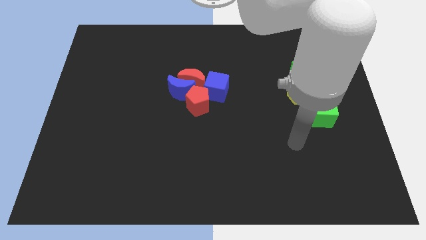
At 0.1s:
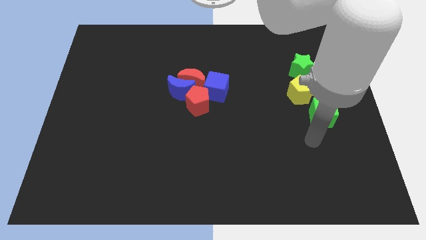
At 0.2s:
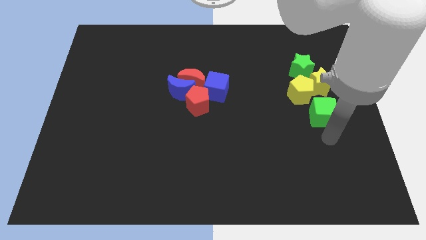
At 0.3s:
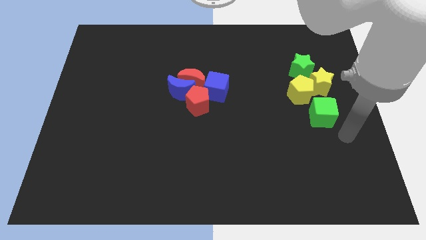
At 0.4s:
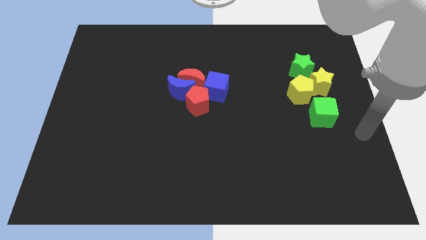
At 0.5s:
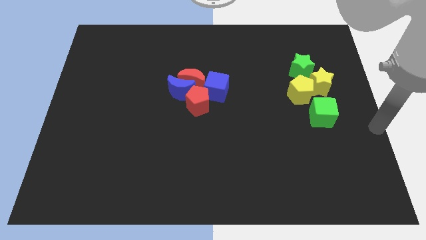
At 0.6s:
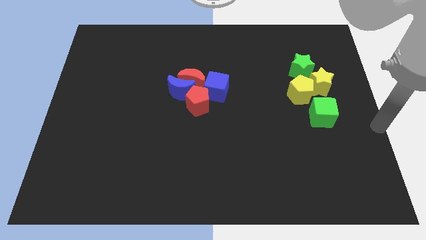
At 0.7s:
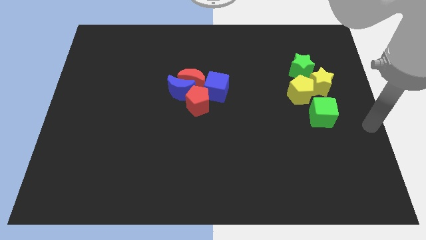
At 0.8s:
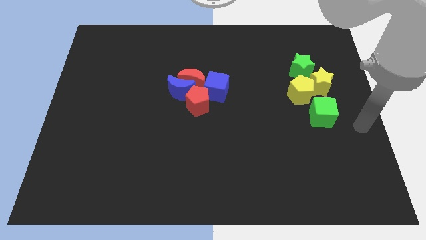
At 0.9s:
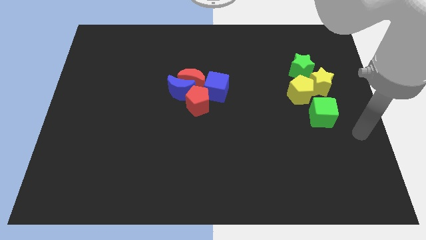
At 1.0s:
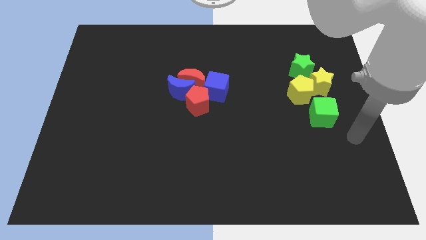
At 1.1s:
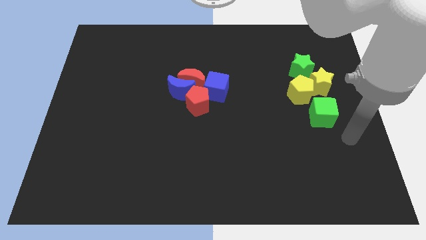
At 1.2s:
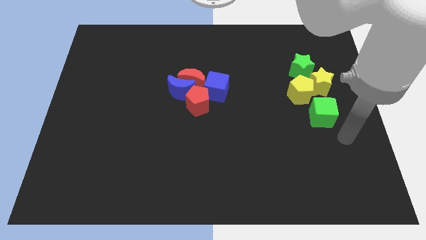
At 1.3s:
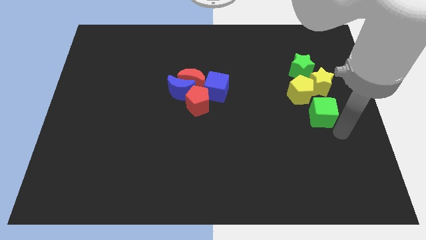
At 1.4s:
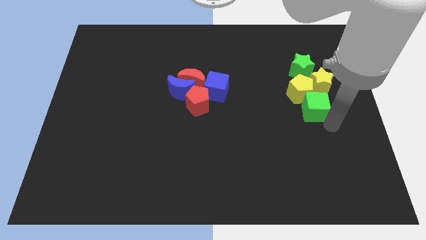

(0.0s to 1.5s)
place your arm to the bottom right of green cube

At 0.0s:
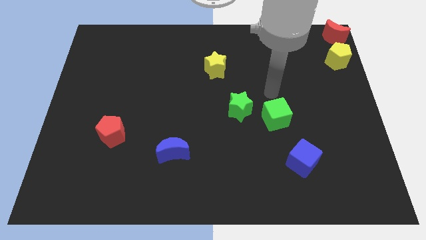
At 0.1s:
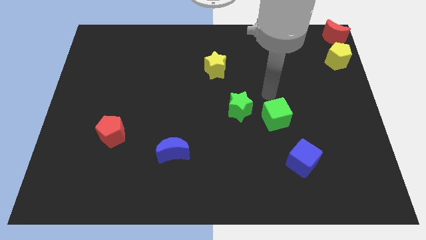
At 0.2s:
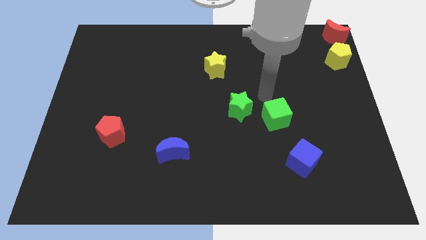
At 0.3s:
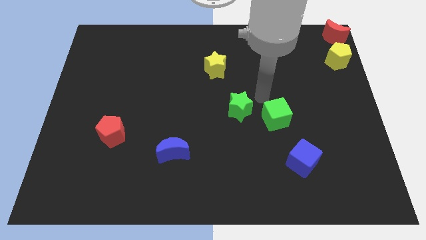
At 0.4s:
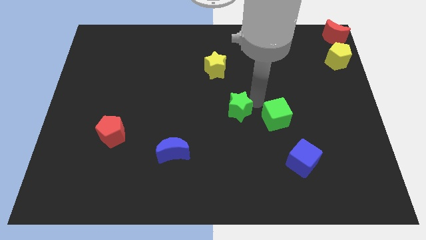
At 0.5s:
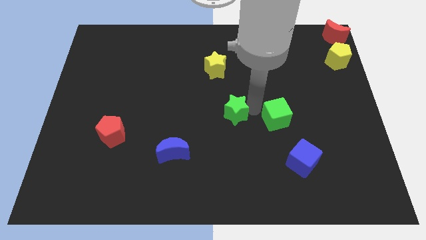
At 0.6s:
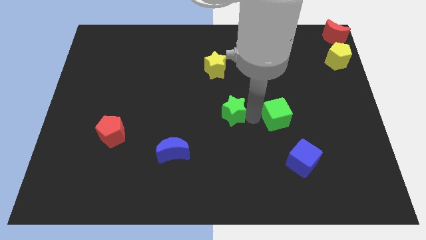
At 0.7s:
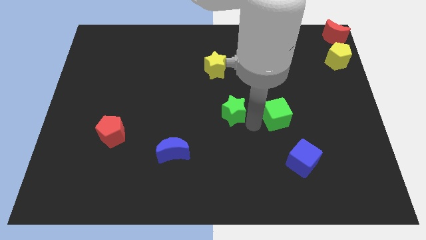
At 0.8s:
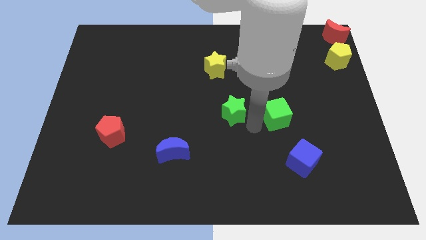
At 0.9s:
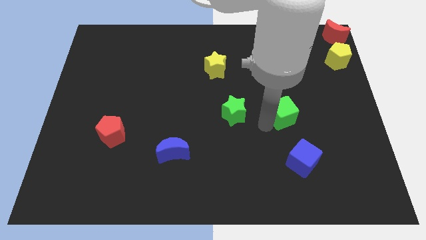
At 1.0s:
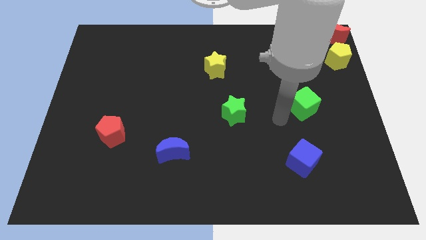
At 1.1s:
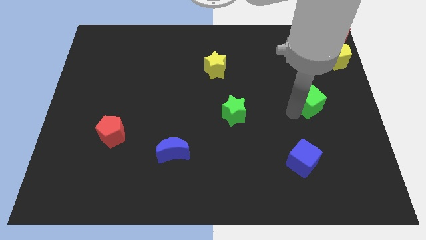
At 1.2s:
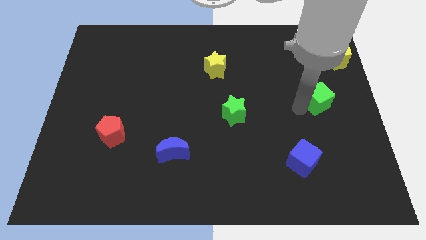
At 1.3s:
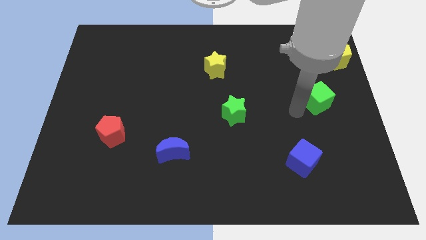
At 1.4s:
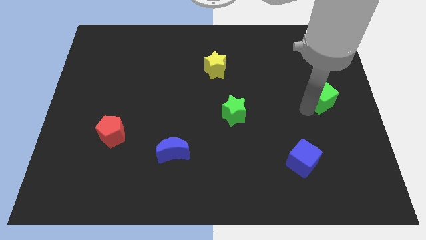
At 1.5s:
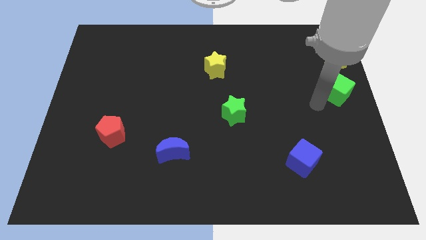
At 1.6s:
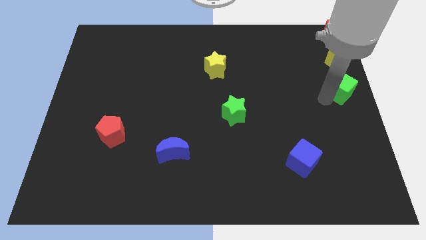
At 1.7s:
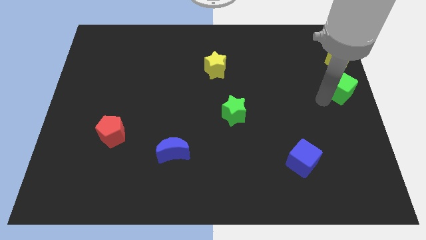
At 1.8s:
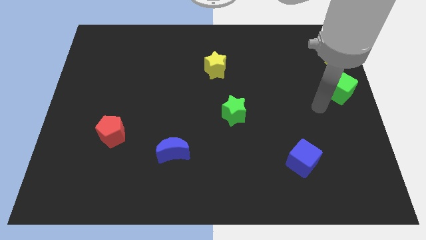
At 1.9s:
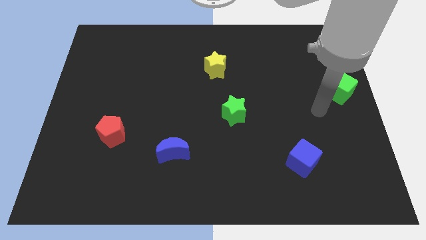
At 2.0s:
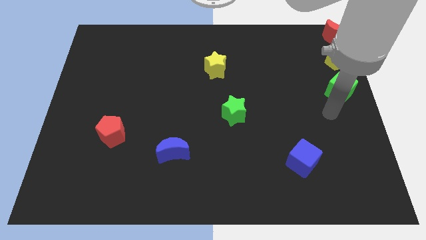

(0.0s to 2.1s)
separate green cube from green star

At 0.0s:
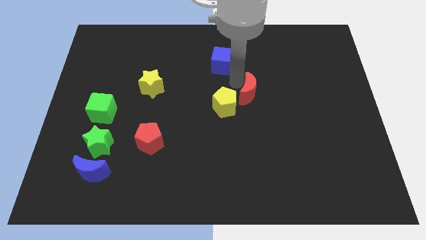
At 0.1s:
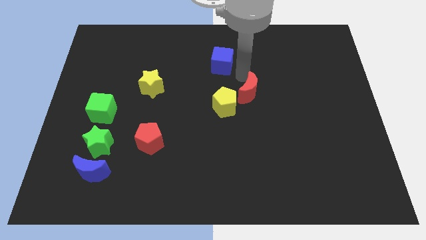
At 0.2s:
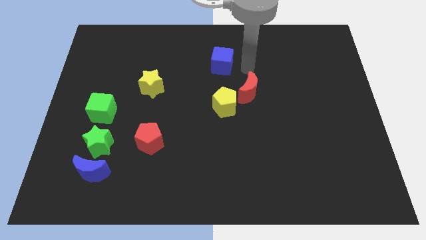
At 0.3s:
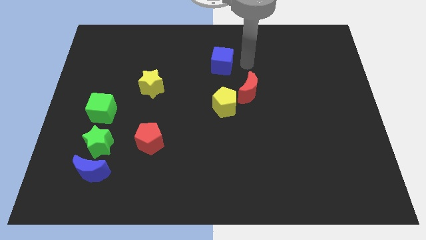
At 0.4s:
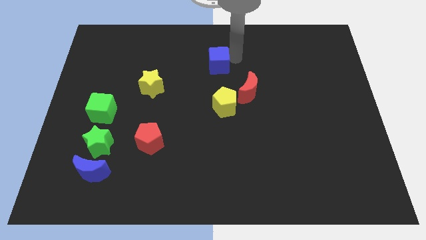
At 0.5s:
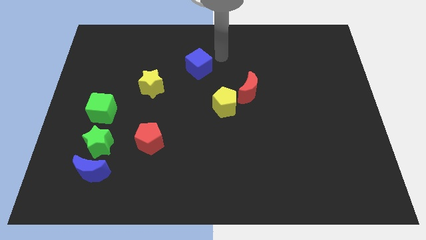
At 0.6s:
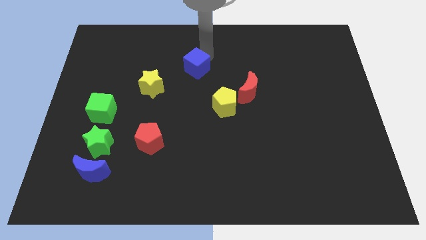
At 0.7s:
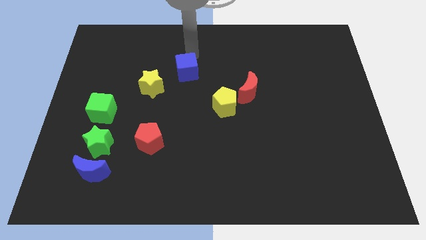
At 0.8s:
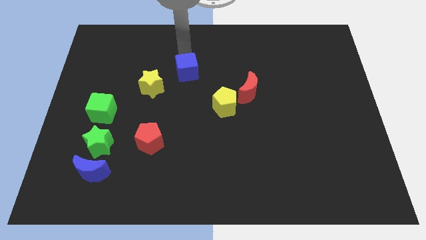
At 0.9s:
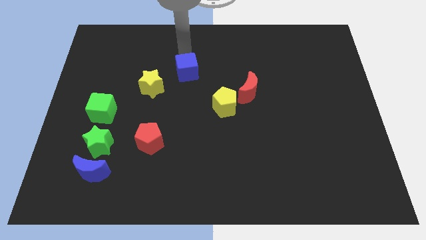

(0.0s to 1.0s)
place above arm above blue cube

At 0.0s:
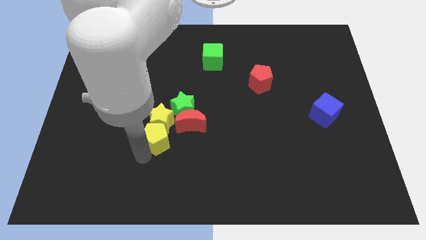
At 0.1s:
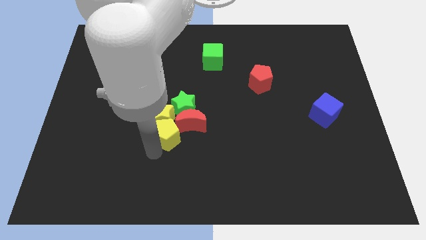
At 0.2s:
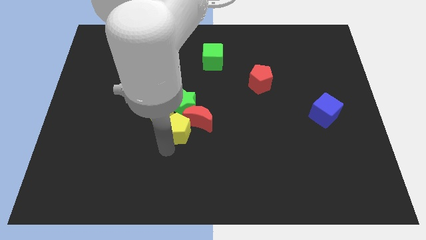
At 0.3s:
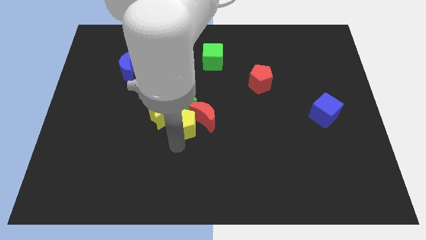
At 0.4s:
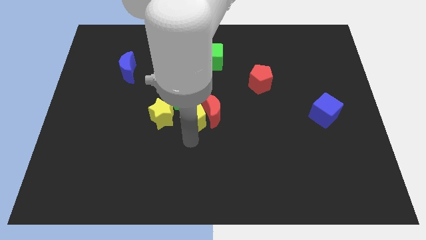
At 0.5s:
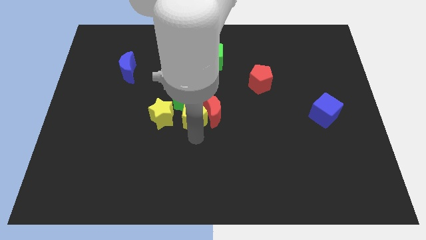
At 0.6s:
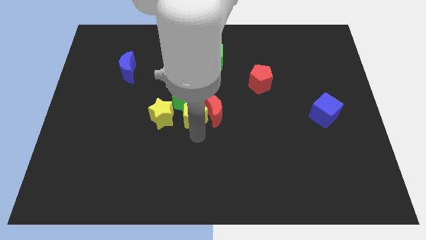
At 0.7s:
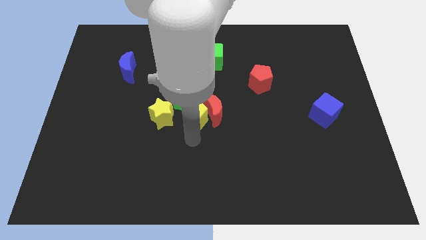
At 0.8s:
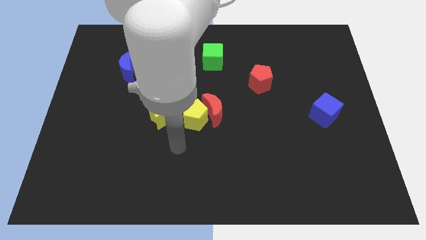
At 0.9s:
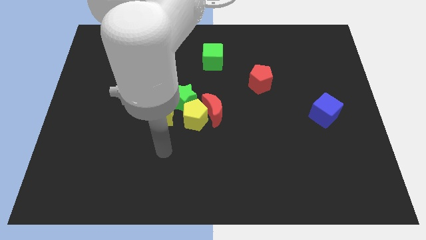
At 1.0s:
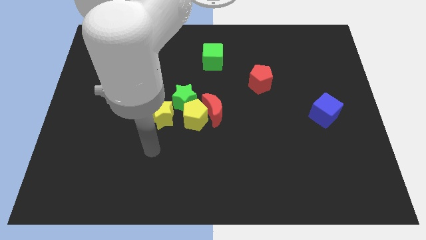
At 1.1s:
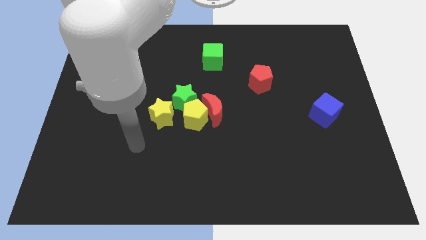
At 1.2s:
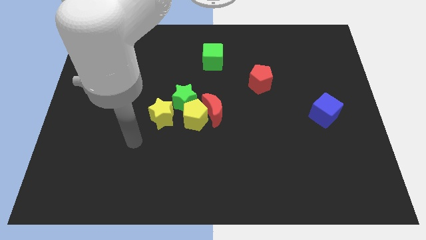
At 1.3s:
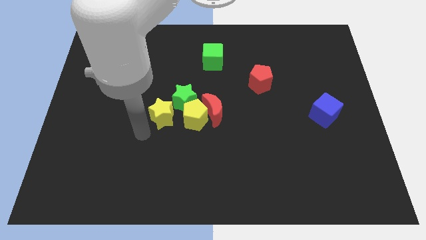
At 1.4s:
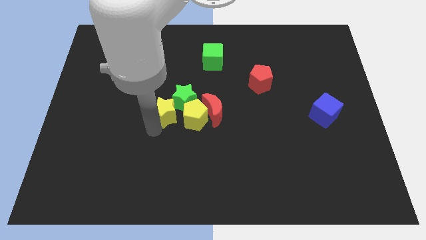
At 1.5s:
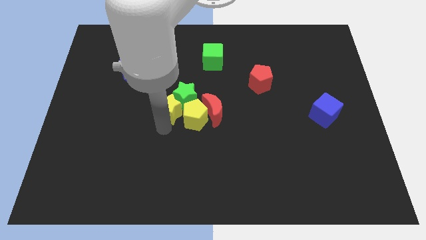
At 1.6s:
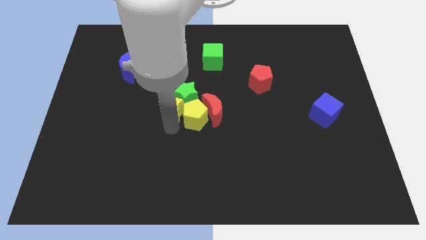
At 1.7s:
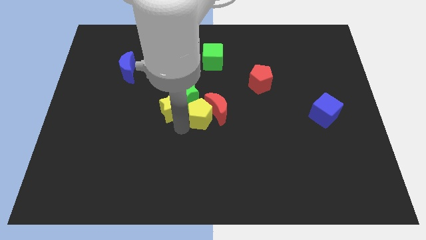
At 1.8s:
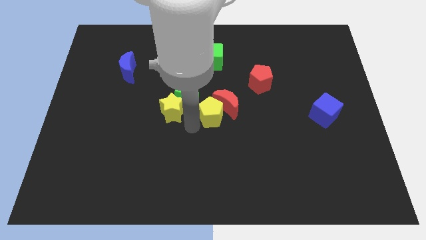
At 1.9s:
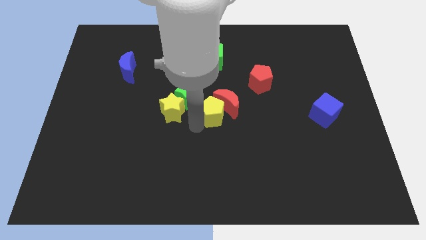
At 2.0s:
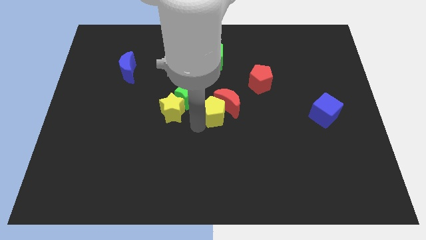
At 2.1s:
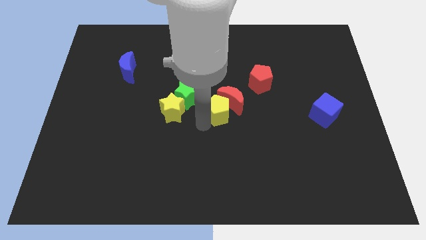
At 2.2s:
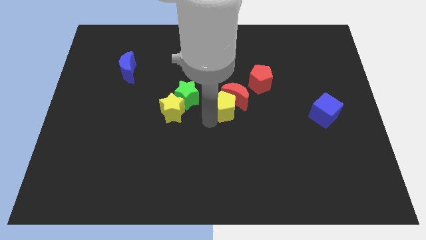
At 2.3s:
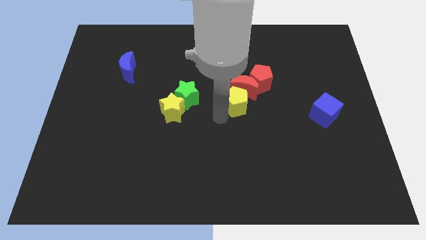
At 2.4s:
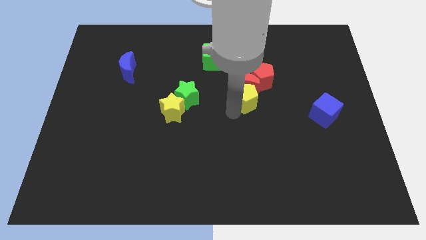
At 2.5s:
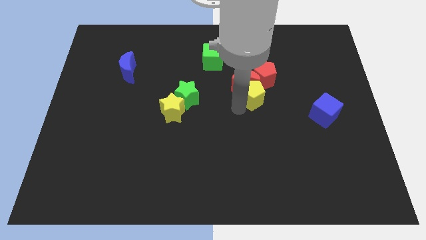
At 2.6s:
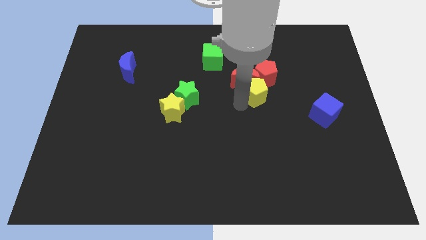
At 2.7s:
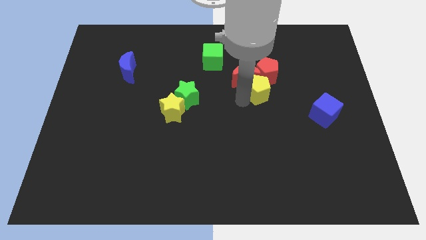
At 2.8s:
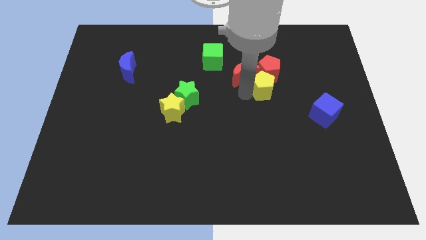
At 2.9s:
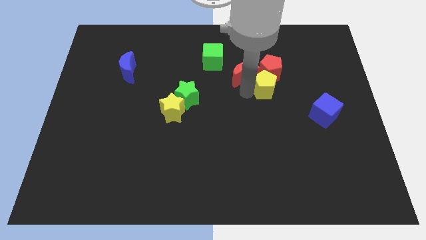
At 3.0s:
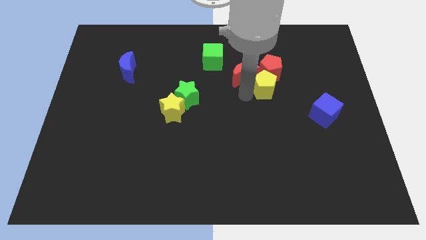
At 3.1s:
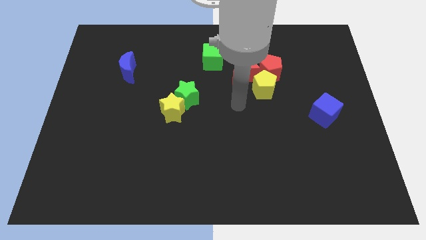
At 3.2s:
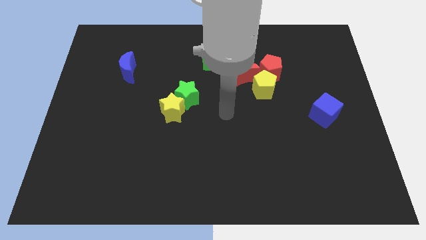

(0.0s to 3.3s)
push the yellow pentagon into the red blocks

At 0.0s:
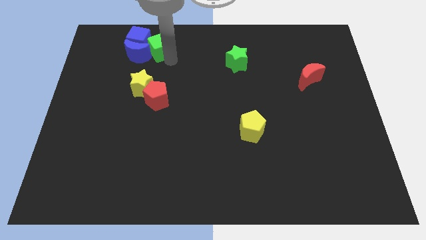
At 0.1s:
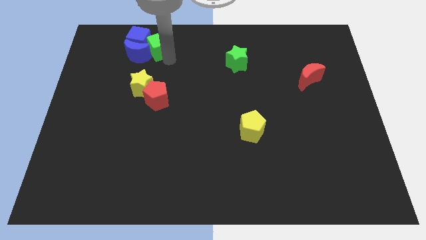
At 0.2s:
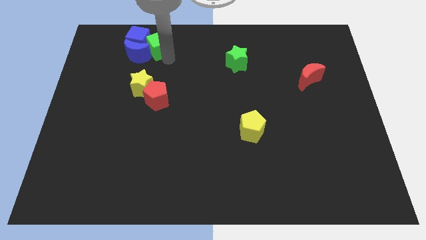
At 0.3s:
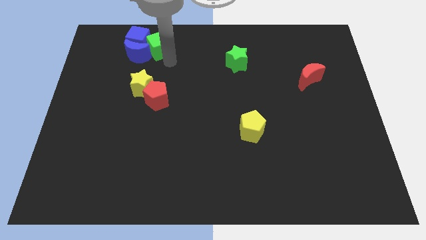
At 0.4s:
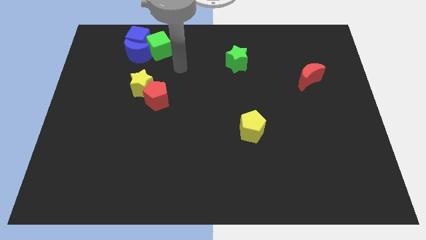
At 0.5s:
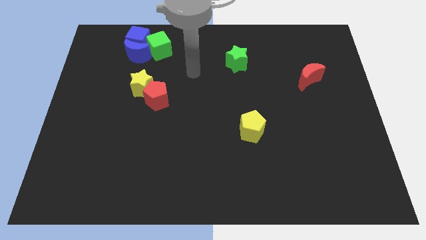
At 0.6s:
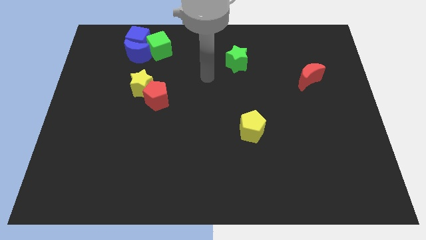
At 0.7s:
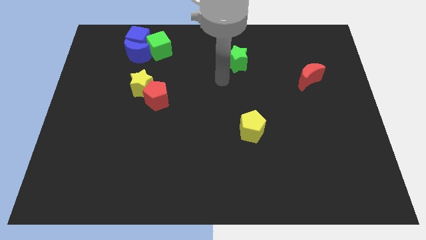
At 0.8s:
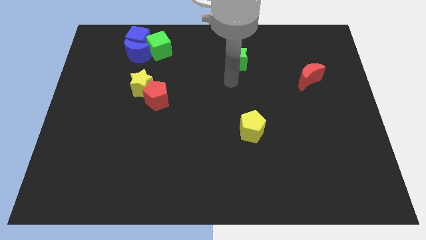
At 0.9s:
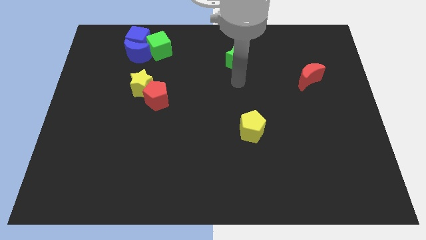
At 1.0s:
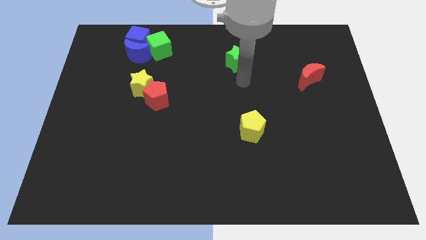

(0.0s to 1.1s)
place the arm below the green star
